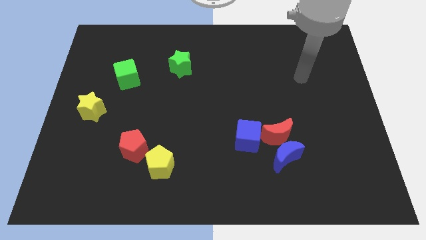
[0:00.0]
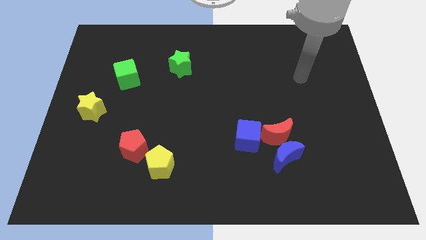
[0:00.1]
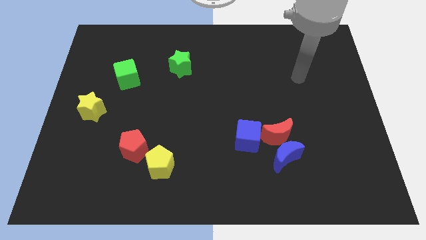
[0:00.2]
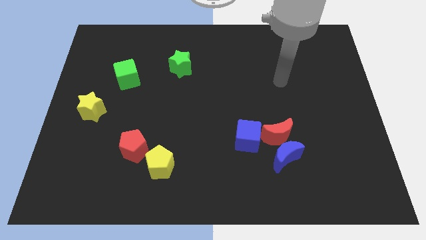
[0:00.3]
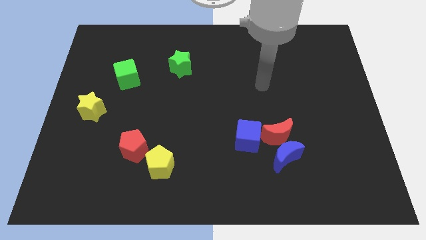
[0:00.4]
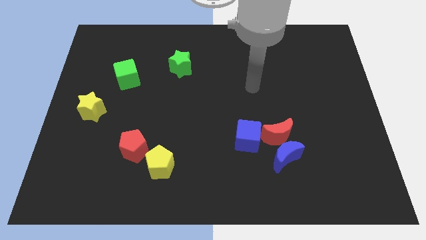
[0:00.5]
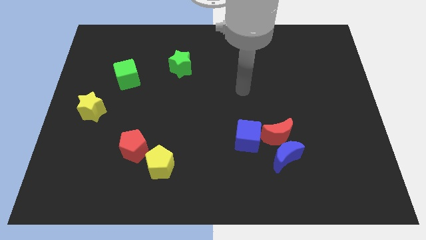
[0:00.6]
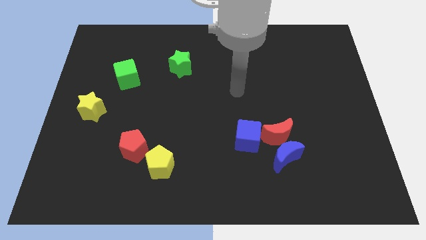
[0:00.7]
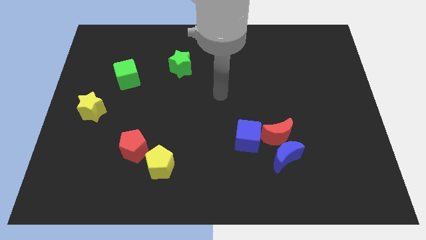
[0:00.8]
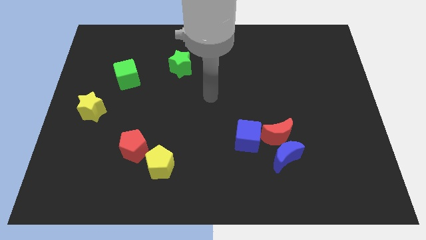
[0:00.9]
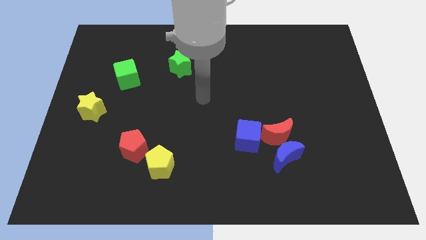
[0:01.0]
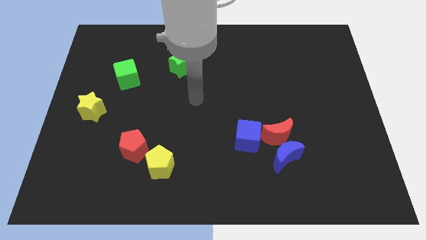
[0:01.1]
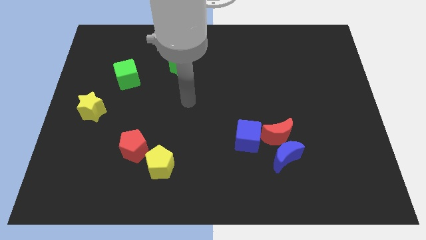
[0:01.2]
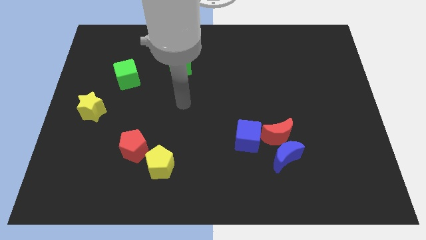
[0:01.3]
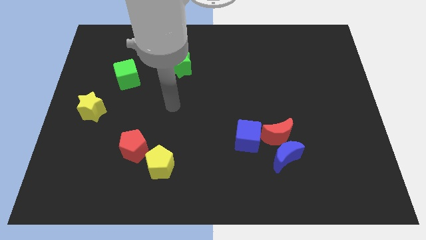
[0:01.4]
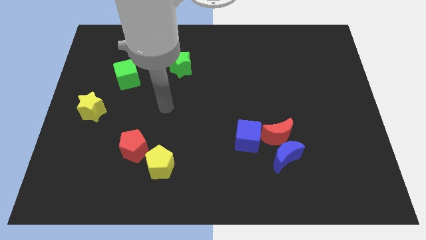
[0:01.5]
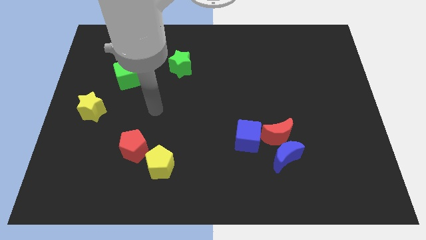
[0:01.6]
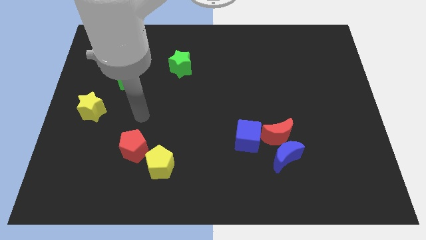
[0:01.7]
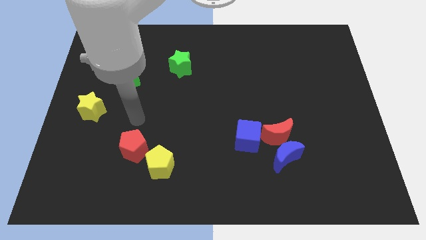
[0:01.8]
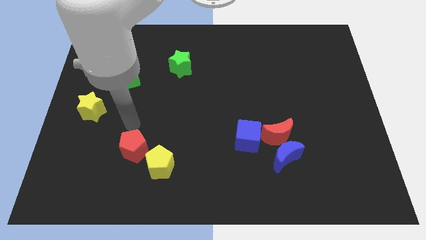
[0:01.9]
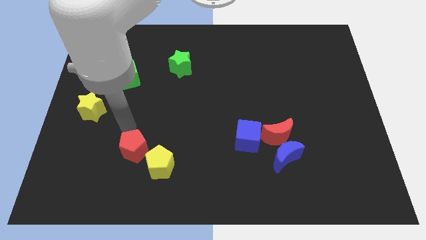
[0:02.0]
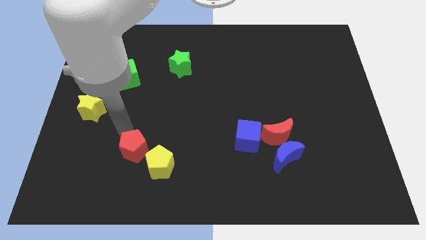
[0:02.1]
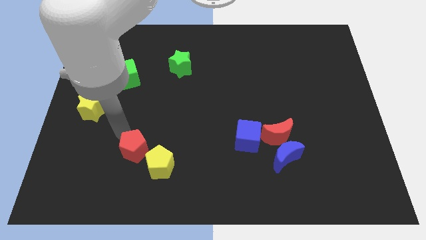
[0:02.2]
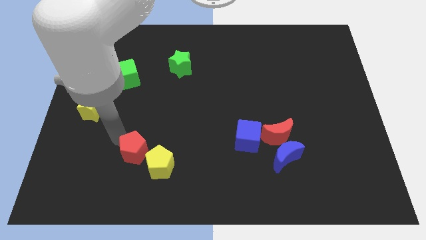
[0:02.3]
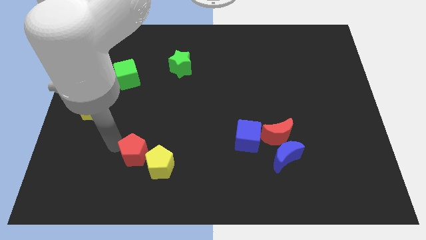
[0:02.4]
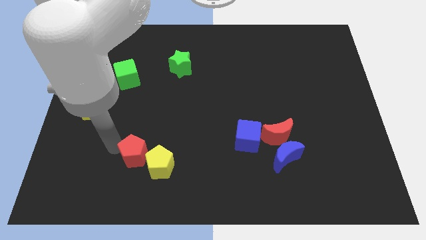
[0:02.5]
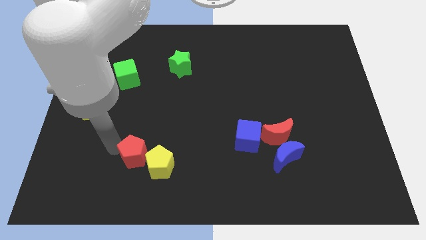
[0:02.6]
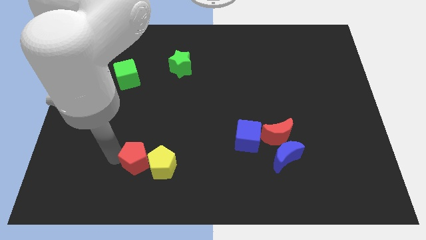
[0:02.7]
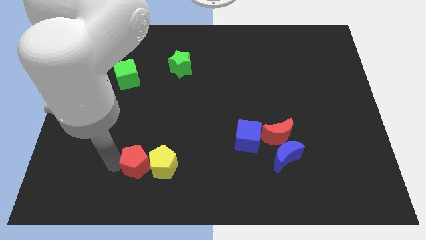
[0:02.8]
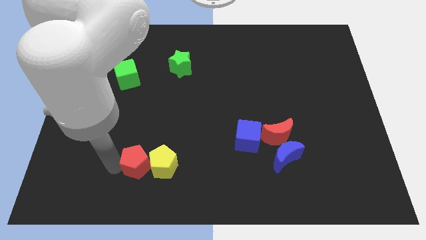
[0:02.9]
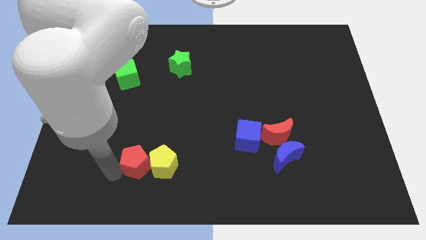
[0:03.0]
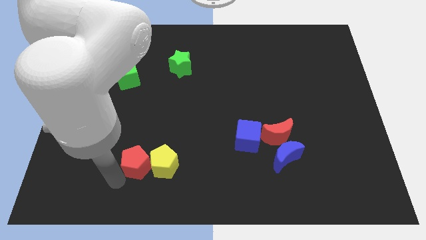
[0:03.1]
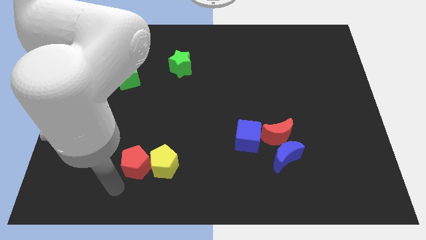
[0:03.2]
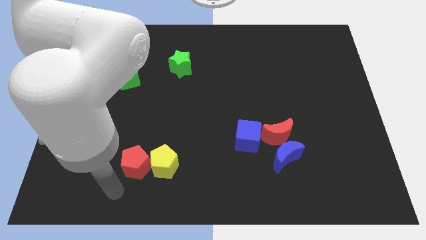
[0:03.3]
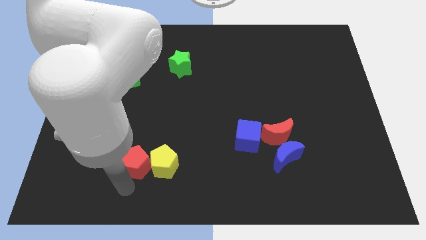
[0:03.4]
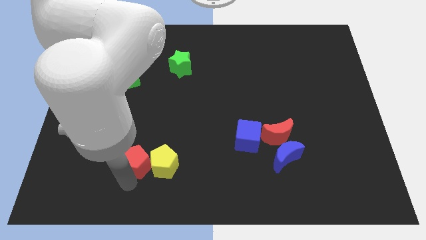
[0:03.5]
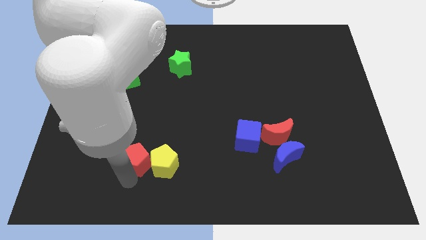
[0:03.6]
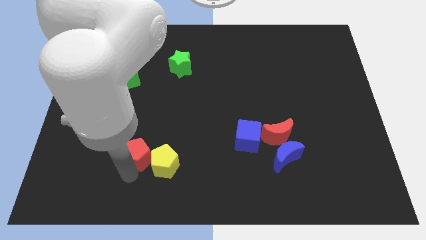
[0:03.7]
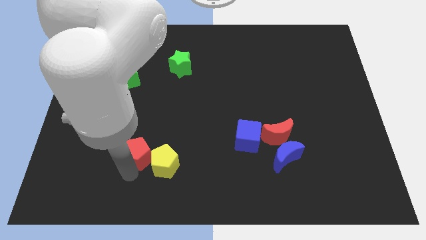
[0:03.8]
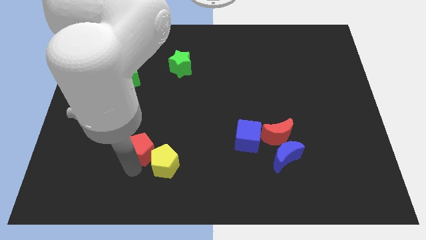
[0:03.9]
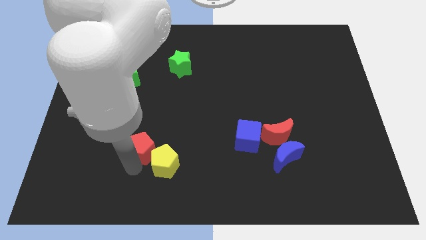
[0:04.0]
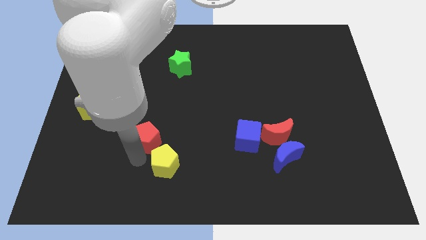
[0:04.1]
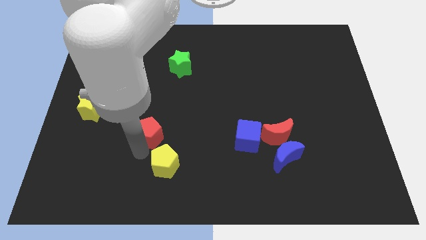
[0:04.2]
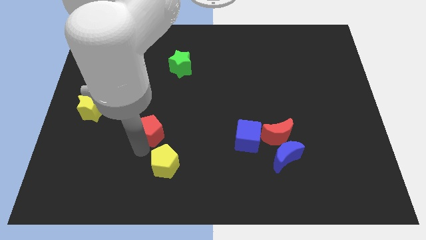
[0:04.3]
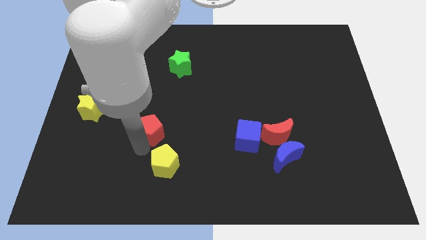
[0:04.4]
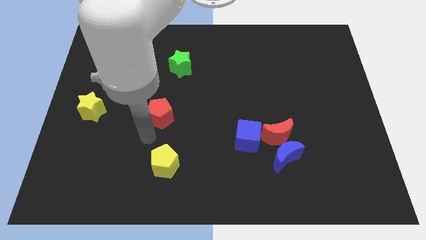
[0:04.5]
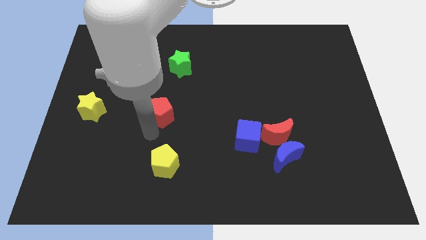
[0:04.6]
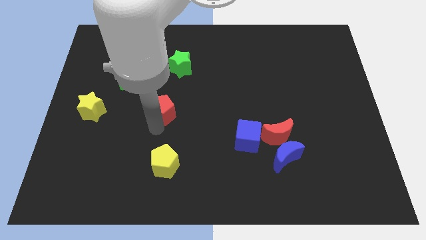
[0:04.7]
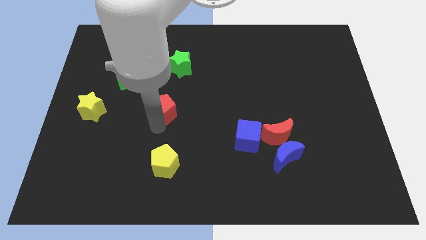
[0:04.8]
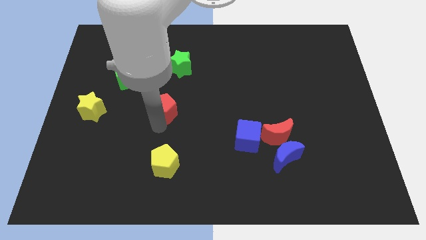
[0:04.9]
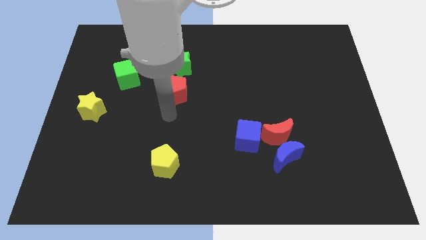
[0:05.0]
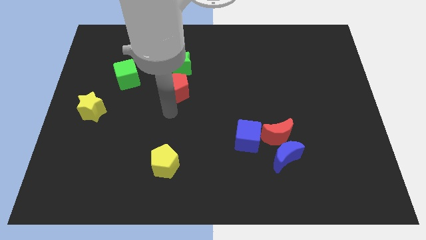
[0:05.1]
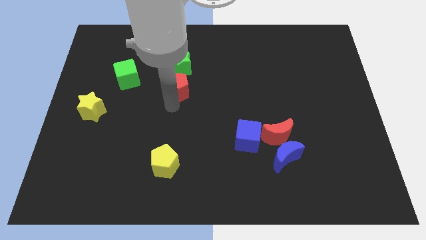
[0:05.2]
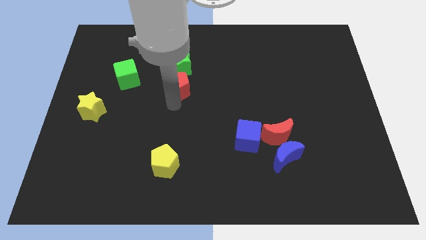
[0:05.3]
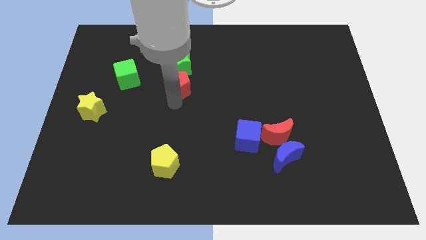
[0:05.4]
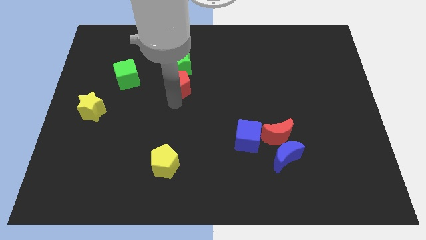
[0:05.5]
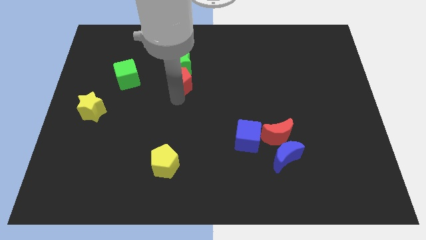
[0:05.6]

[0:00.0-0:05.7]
put the red pentagon next to the green star

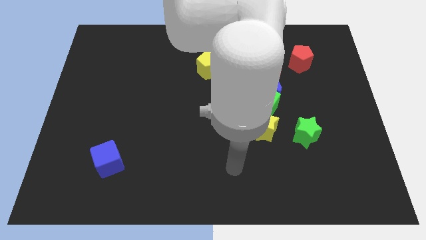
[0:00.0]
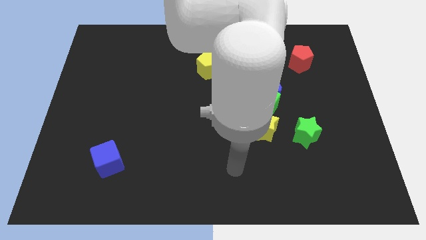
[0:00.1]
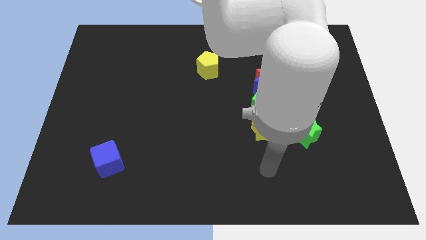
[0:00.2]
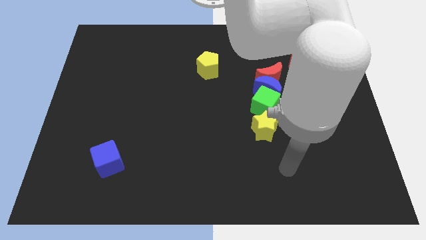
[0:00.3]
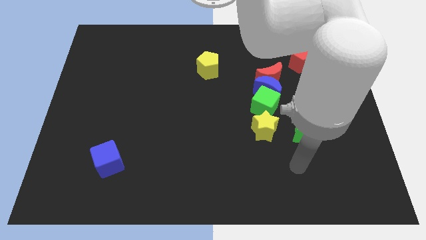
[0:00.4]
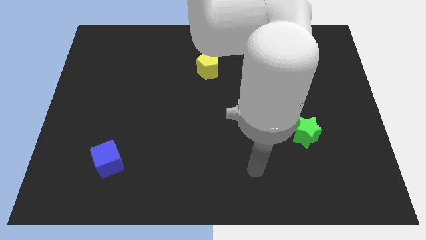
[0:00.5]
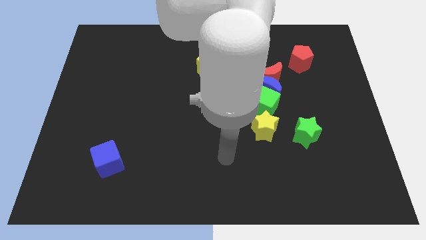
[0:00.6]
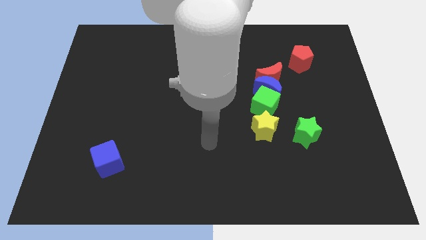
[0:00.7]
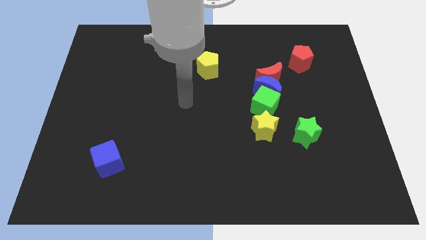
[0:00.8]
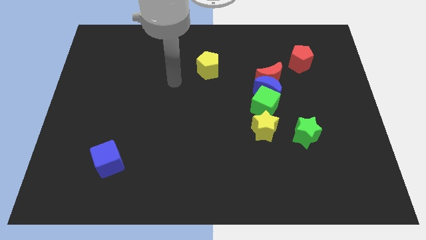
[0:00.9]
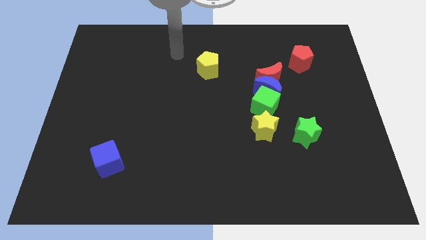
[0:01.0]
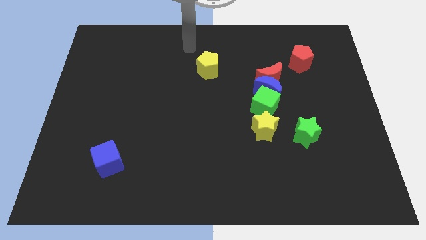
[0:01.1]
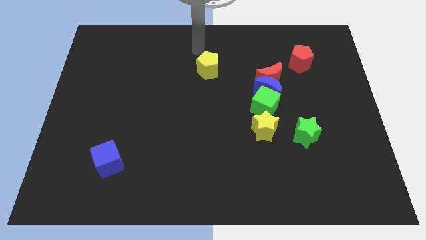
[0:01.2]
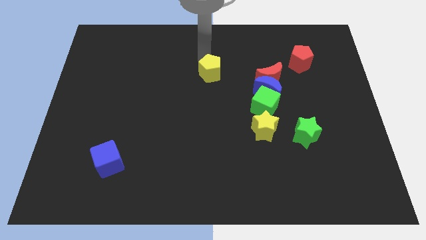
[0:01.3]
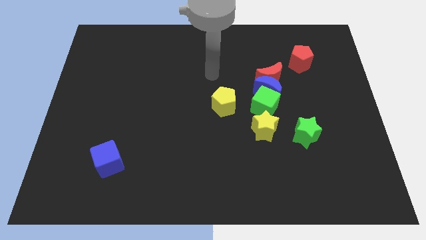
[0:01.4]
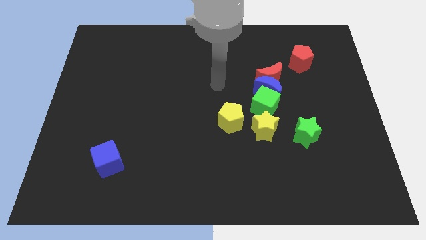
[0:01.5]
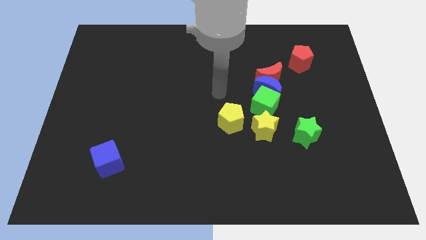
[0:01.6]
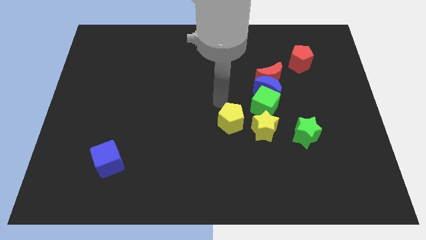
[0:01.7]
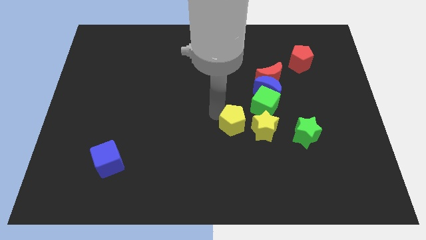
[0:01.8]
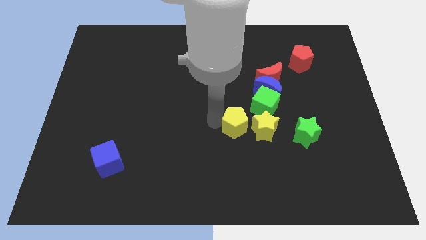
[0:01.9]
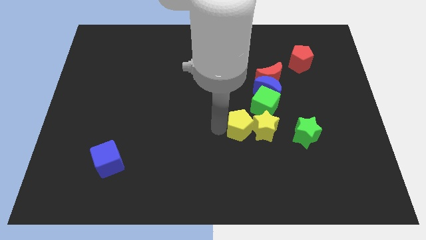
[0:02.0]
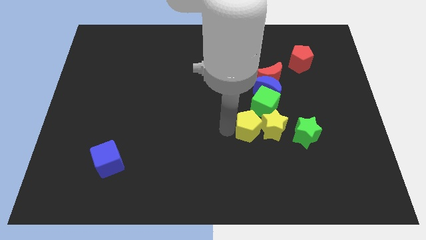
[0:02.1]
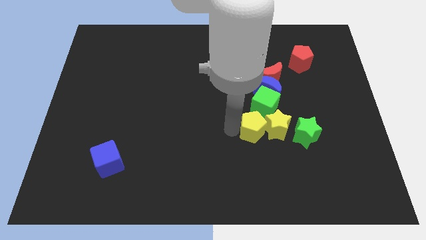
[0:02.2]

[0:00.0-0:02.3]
put the yellow pentagon close to the yellow star

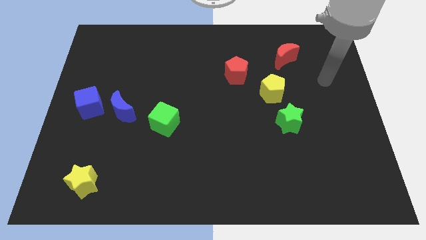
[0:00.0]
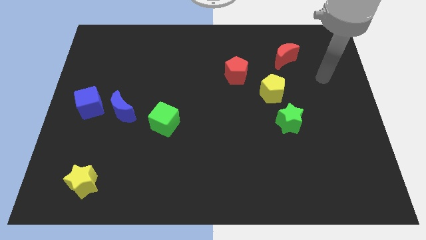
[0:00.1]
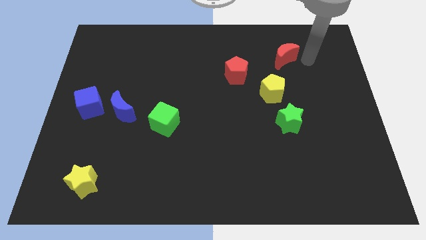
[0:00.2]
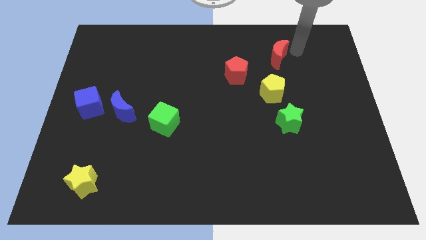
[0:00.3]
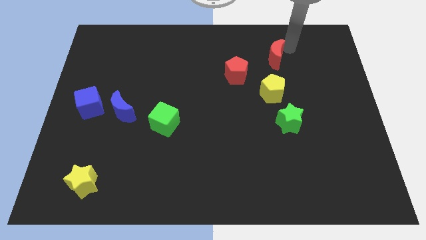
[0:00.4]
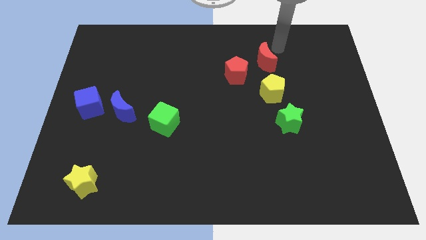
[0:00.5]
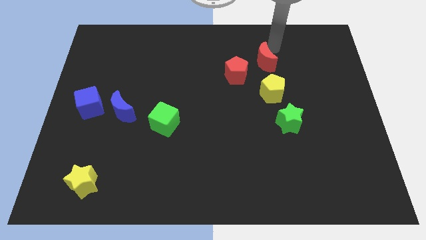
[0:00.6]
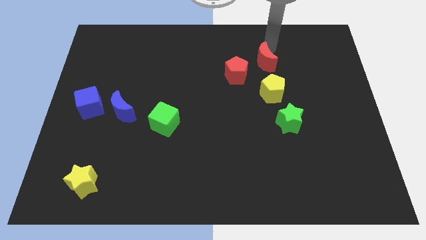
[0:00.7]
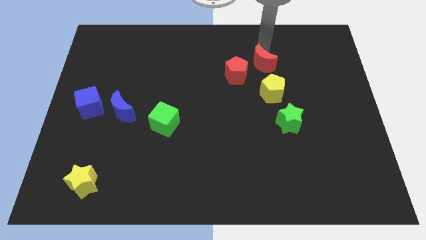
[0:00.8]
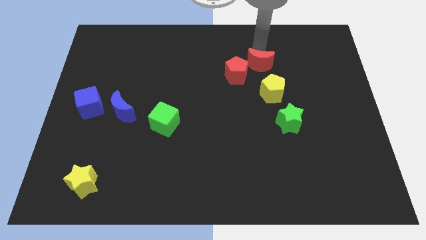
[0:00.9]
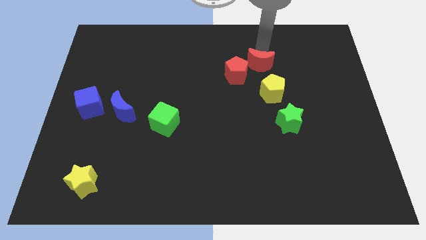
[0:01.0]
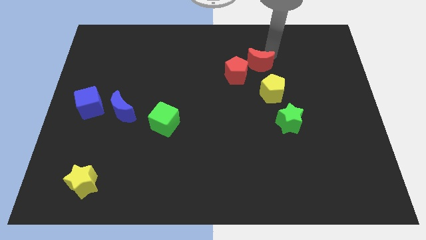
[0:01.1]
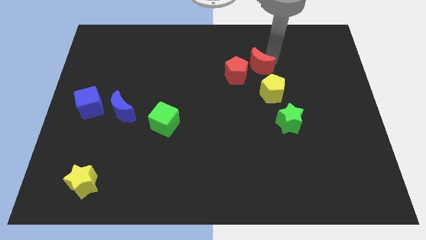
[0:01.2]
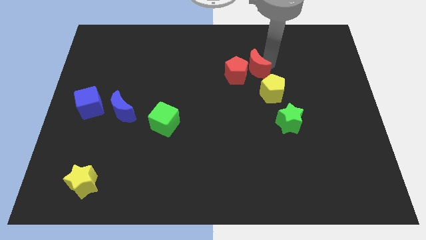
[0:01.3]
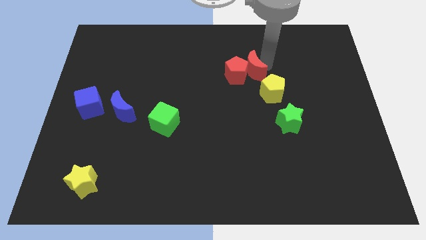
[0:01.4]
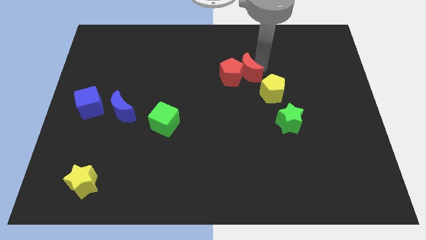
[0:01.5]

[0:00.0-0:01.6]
move the red moon towards the red pentagon
